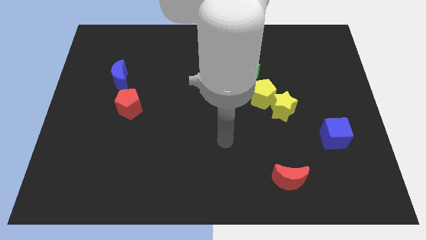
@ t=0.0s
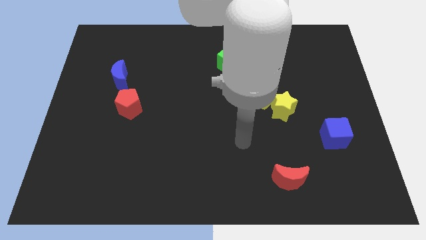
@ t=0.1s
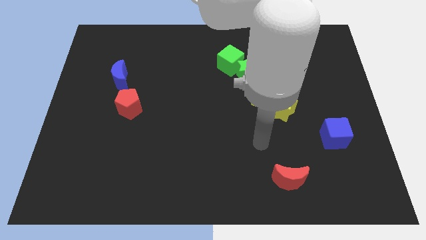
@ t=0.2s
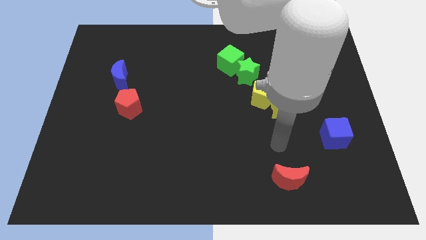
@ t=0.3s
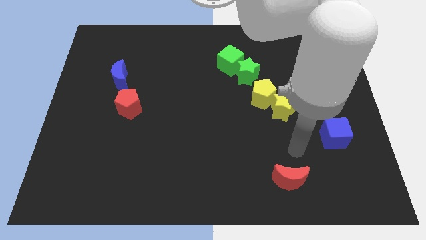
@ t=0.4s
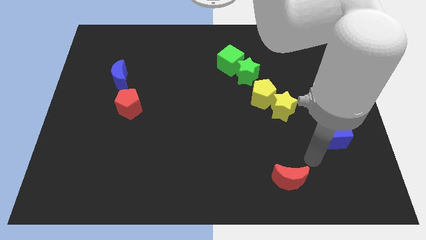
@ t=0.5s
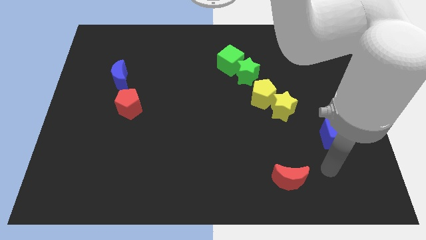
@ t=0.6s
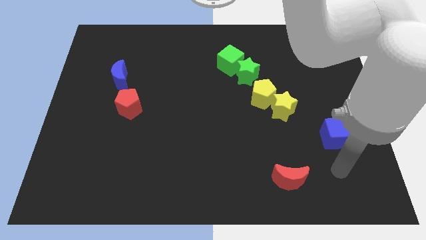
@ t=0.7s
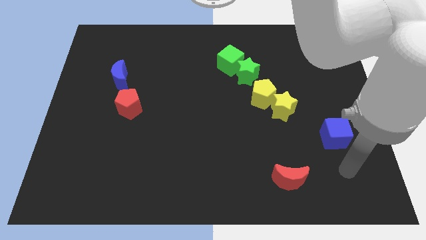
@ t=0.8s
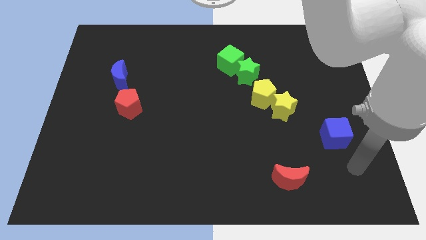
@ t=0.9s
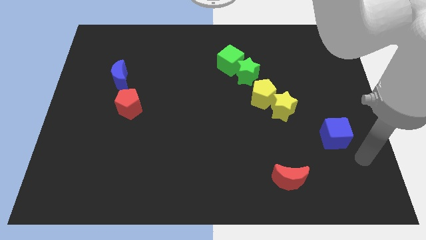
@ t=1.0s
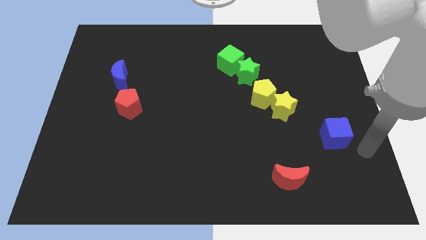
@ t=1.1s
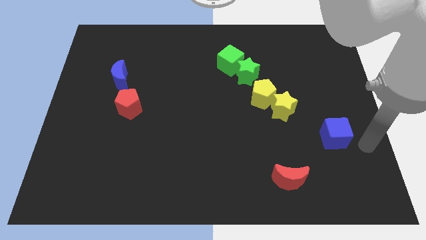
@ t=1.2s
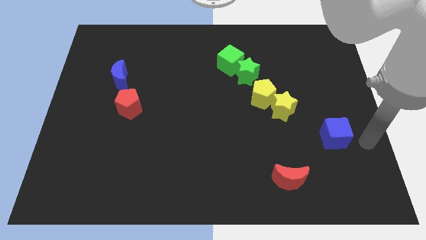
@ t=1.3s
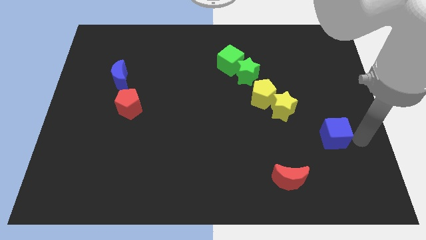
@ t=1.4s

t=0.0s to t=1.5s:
point your arm at the right side of the blue cube

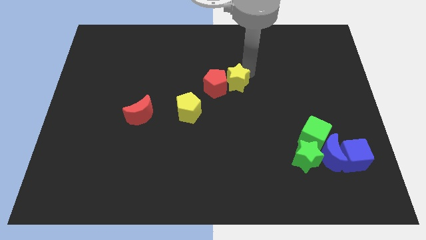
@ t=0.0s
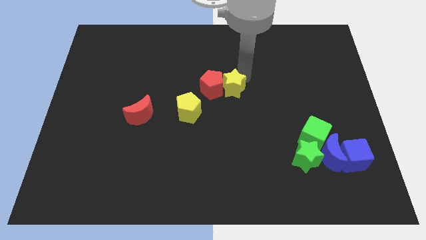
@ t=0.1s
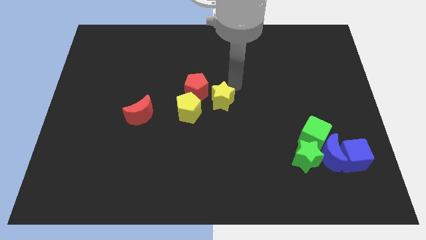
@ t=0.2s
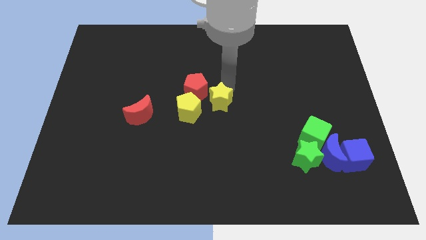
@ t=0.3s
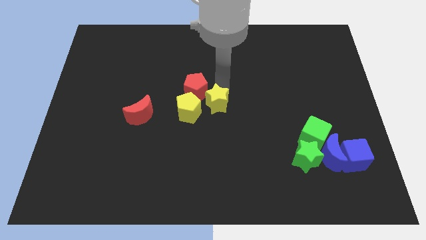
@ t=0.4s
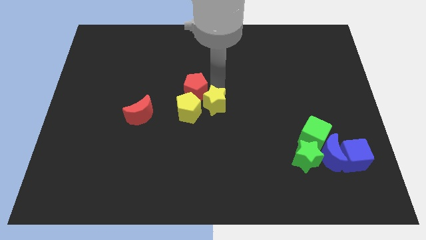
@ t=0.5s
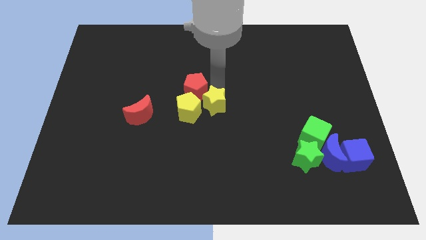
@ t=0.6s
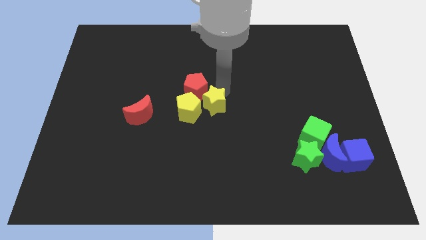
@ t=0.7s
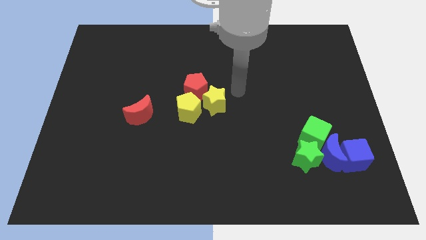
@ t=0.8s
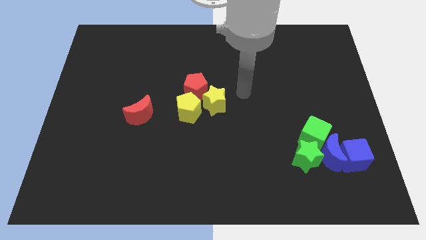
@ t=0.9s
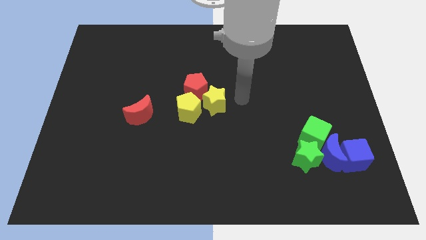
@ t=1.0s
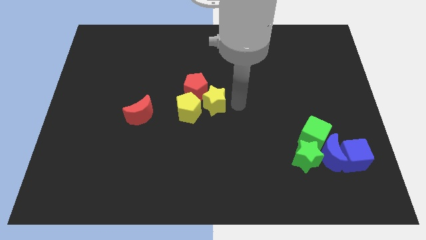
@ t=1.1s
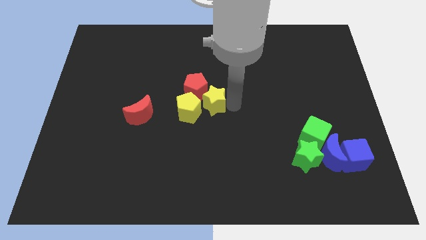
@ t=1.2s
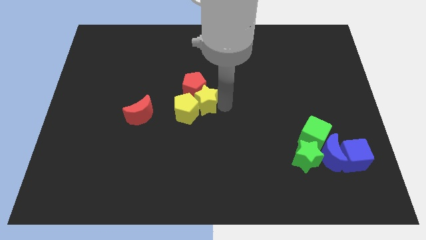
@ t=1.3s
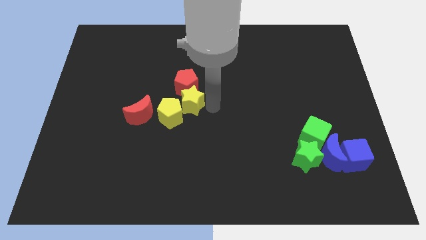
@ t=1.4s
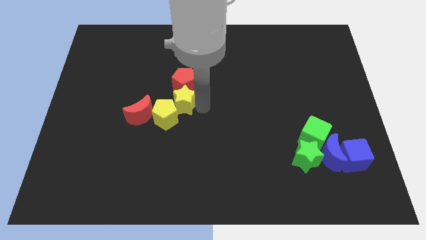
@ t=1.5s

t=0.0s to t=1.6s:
push the yellow star in to the red pentagon

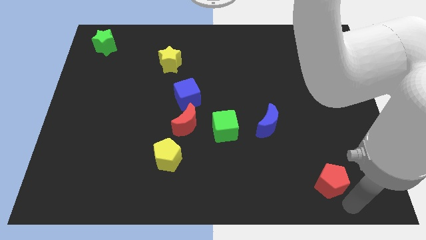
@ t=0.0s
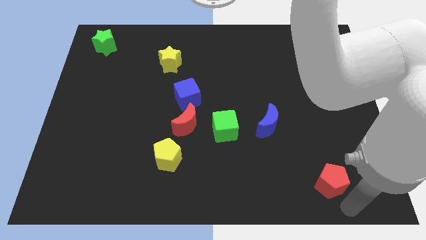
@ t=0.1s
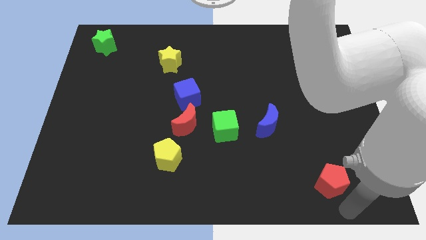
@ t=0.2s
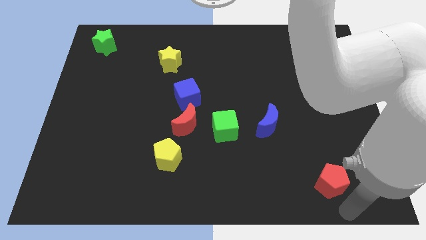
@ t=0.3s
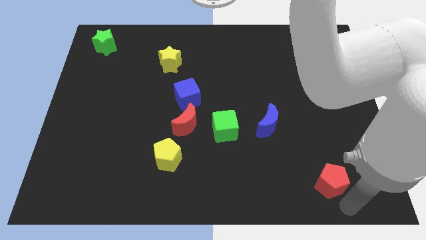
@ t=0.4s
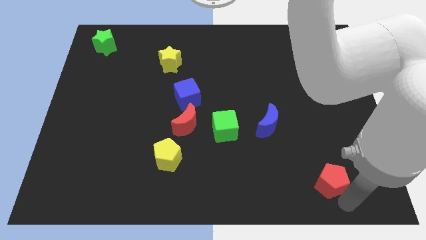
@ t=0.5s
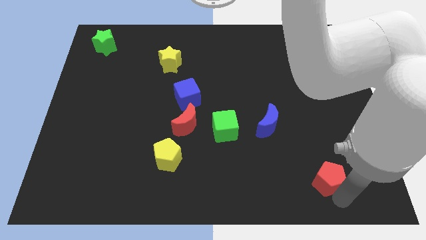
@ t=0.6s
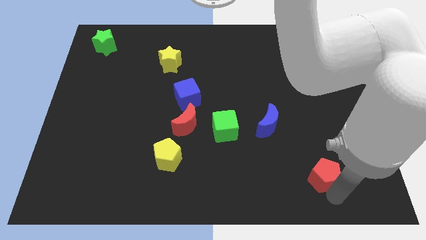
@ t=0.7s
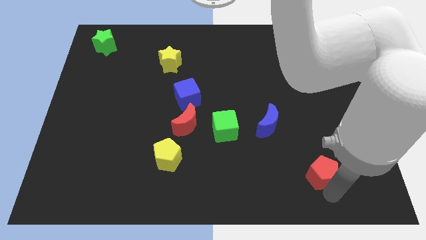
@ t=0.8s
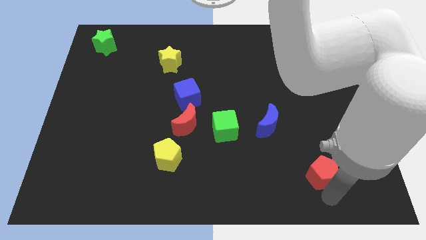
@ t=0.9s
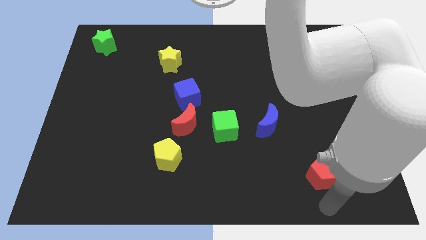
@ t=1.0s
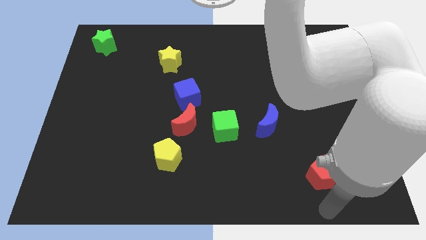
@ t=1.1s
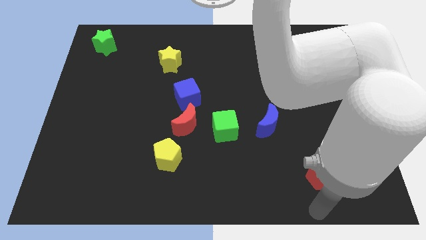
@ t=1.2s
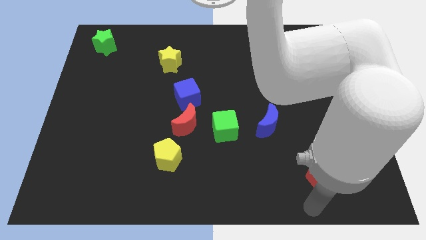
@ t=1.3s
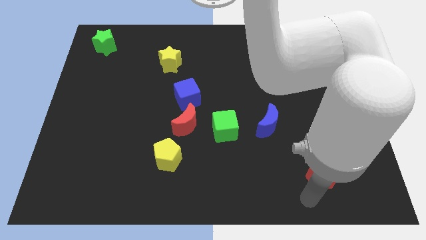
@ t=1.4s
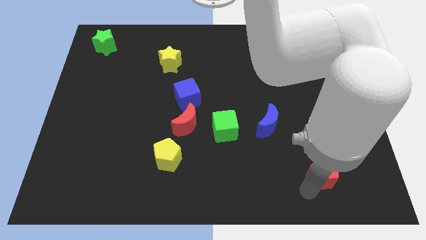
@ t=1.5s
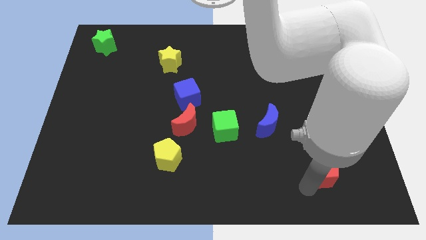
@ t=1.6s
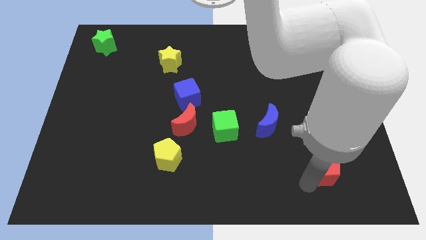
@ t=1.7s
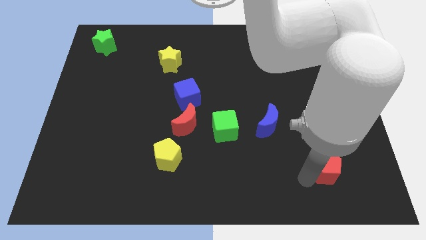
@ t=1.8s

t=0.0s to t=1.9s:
slightly push the red pentagon upwards

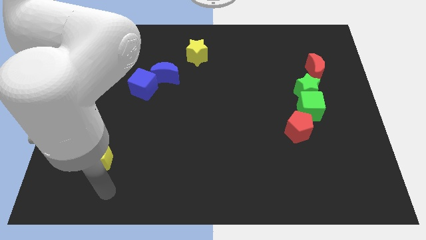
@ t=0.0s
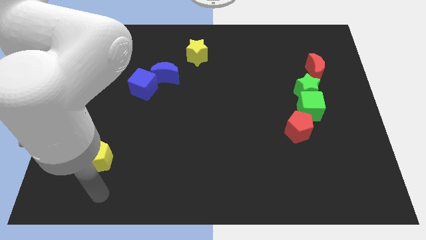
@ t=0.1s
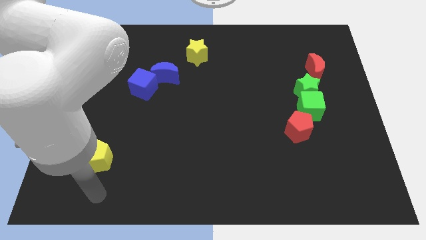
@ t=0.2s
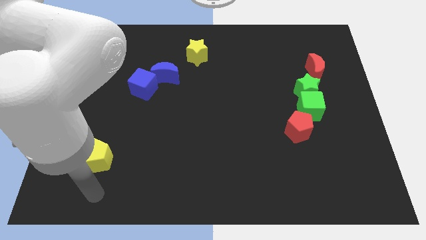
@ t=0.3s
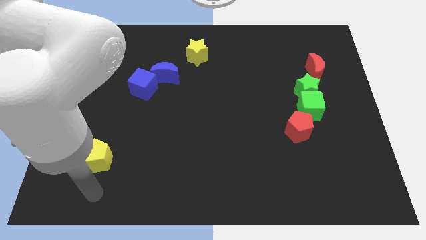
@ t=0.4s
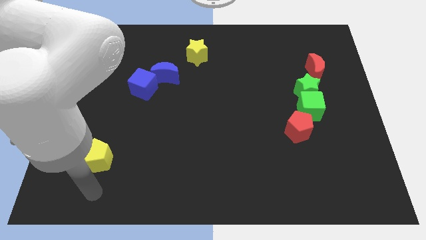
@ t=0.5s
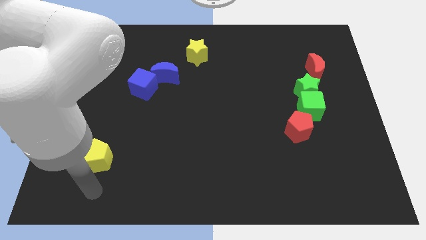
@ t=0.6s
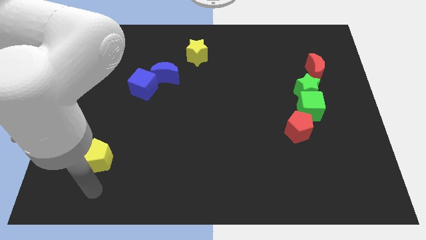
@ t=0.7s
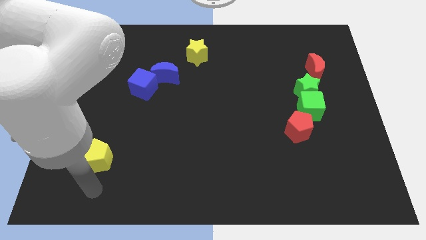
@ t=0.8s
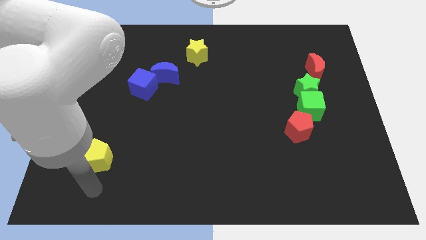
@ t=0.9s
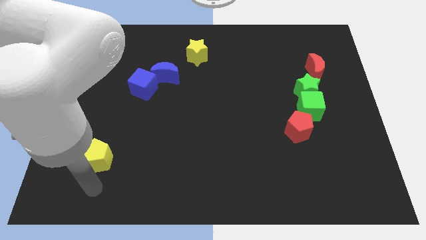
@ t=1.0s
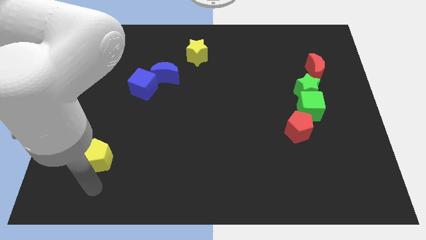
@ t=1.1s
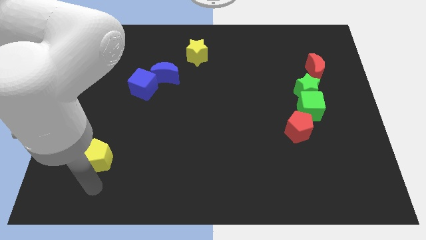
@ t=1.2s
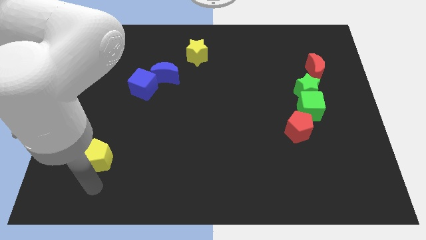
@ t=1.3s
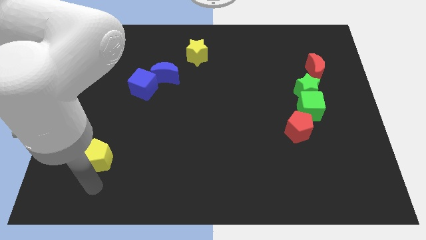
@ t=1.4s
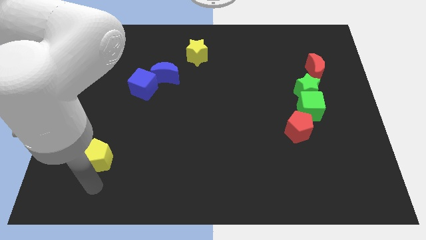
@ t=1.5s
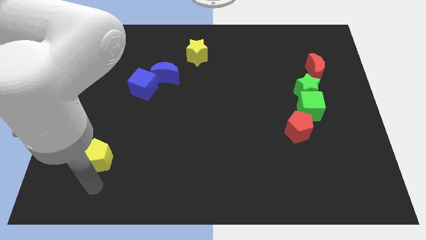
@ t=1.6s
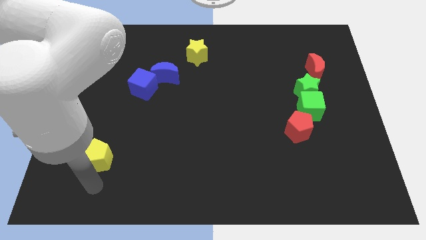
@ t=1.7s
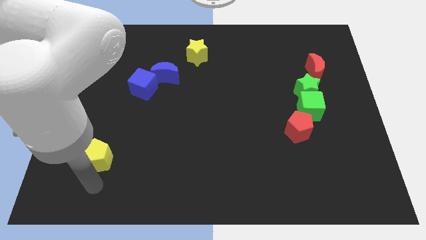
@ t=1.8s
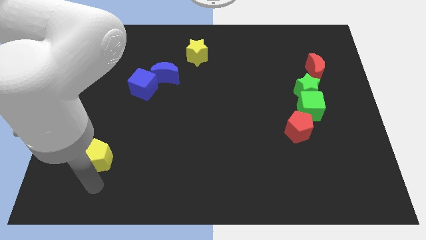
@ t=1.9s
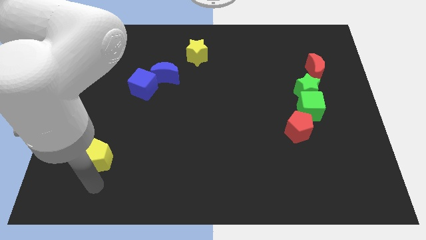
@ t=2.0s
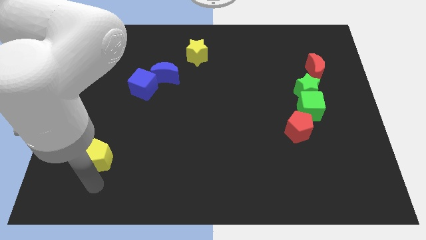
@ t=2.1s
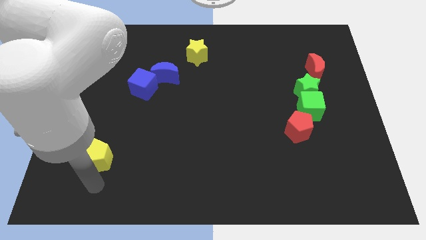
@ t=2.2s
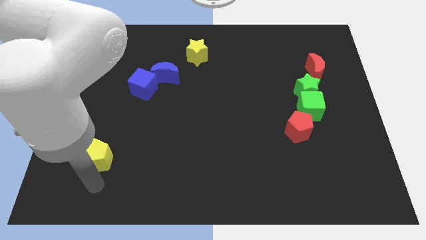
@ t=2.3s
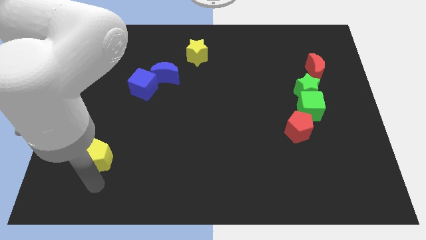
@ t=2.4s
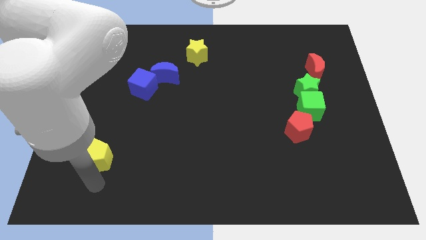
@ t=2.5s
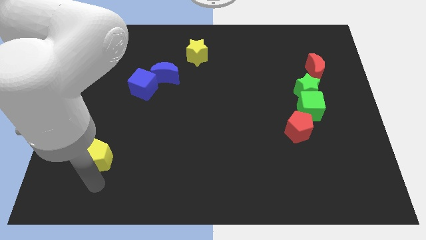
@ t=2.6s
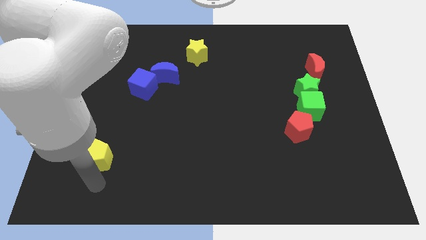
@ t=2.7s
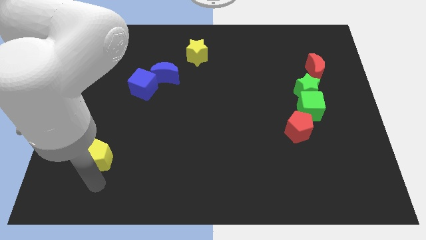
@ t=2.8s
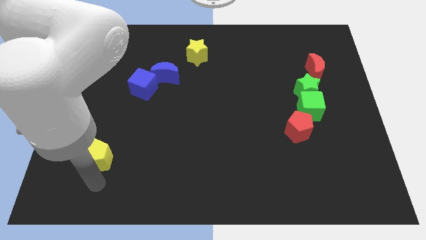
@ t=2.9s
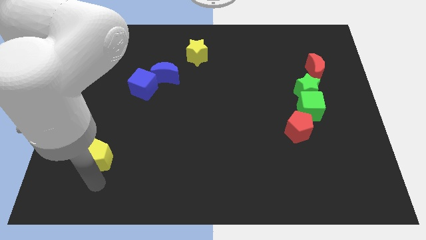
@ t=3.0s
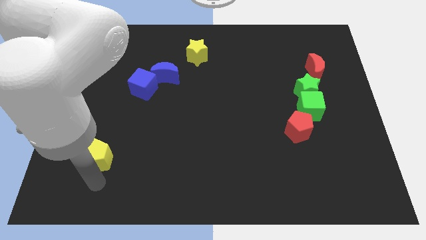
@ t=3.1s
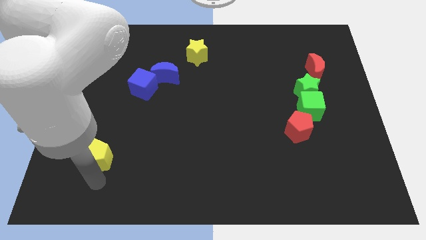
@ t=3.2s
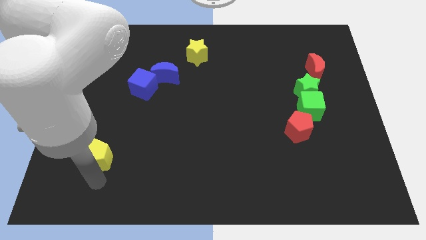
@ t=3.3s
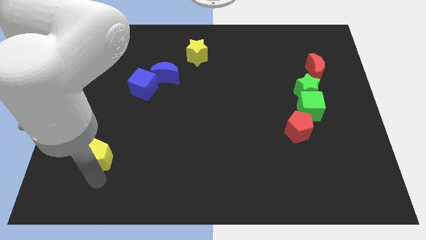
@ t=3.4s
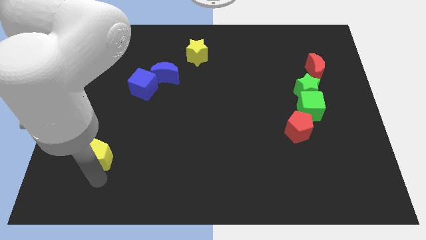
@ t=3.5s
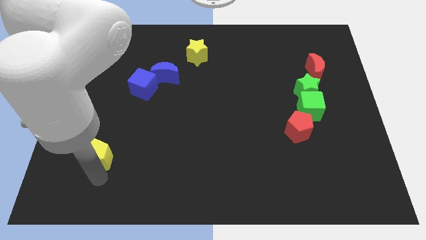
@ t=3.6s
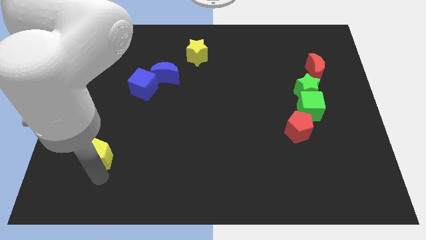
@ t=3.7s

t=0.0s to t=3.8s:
place your arm at the bottom of yellow pentagon

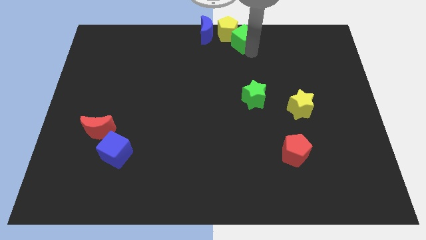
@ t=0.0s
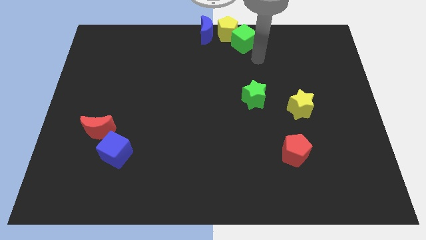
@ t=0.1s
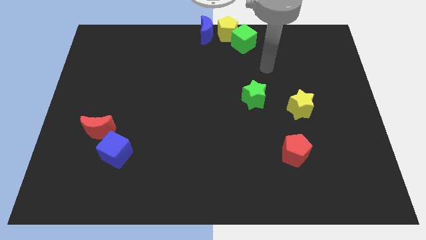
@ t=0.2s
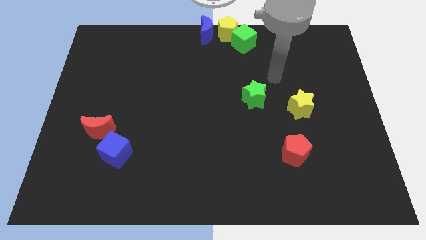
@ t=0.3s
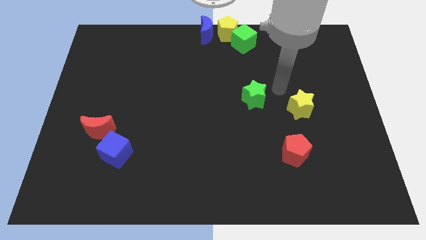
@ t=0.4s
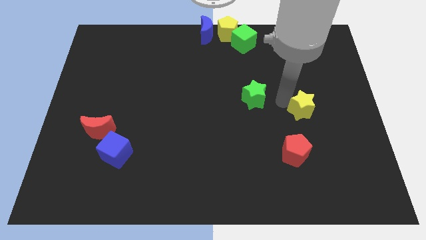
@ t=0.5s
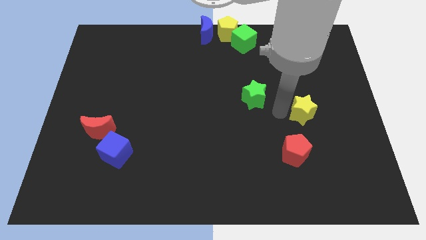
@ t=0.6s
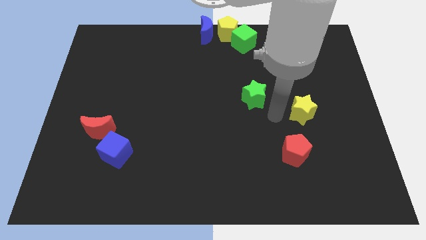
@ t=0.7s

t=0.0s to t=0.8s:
move the yellow star slightly downwards
